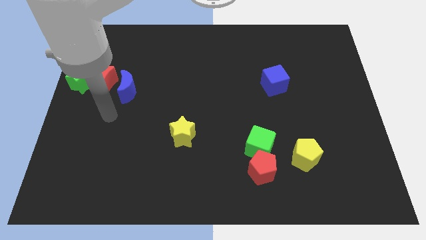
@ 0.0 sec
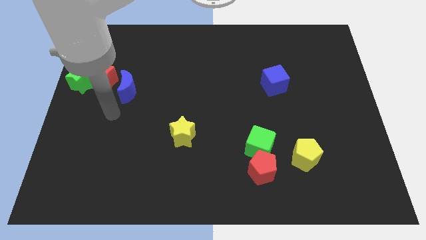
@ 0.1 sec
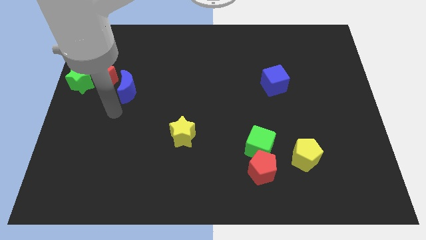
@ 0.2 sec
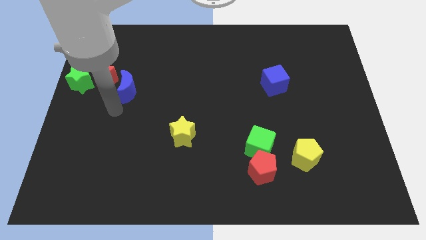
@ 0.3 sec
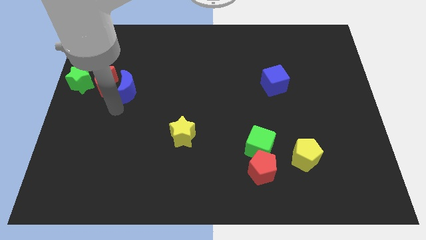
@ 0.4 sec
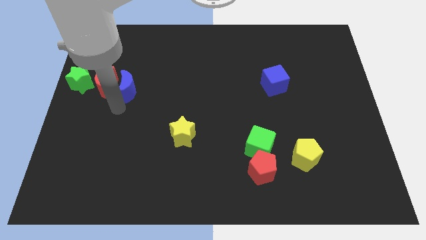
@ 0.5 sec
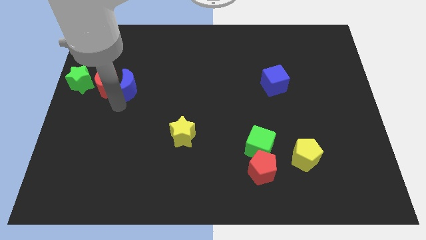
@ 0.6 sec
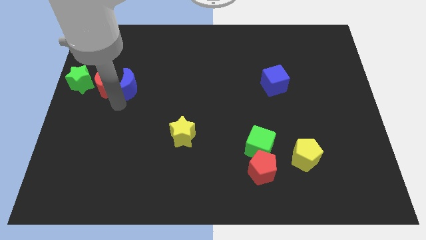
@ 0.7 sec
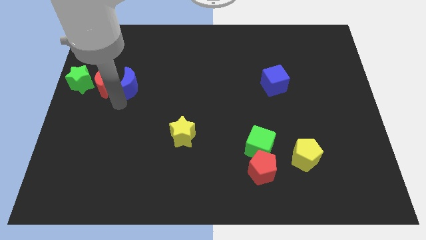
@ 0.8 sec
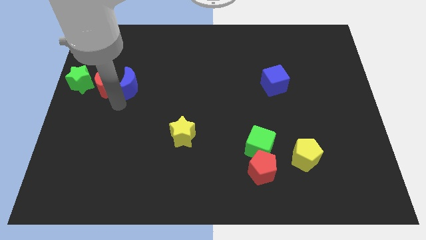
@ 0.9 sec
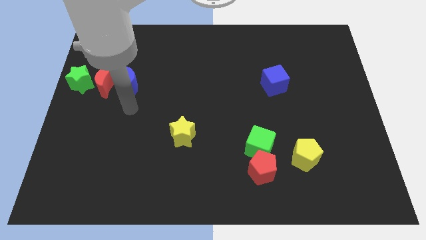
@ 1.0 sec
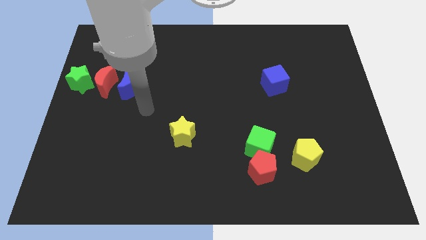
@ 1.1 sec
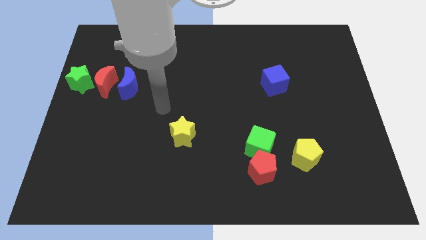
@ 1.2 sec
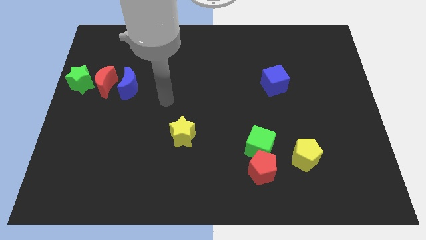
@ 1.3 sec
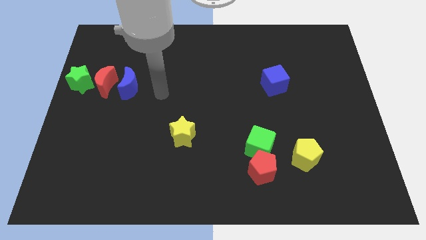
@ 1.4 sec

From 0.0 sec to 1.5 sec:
push the blue moon upwards slightly

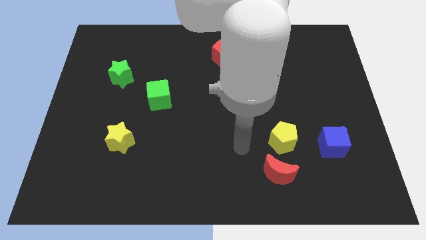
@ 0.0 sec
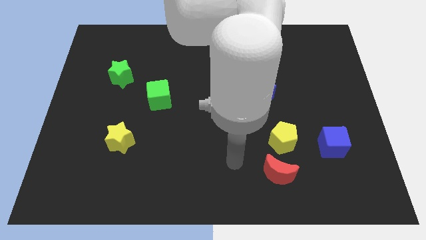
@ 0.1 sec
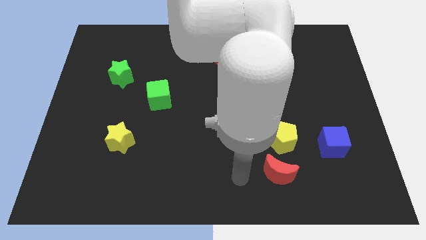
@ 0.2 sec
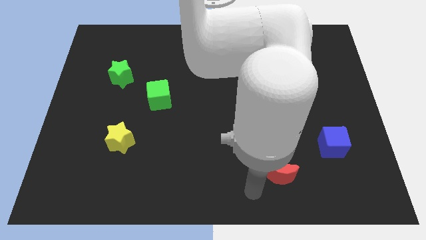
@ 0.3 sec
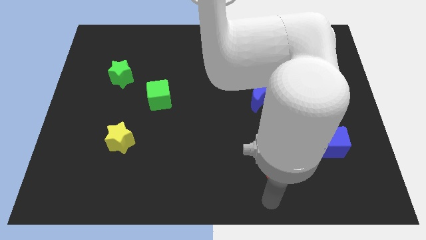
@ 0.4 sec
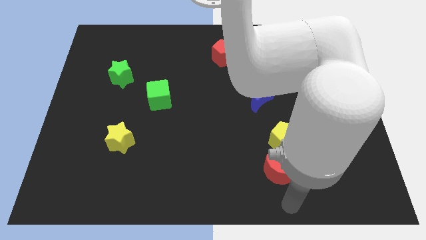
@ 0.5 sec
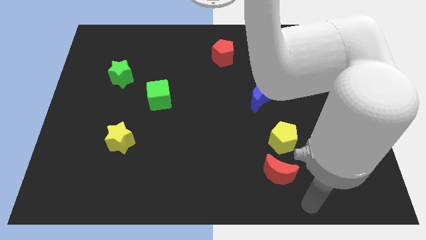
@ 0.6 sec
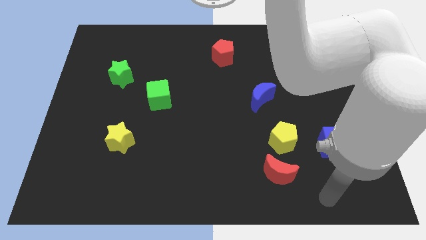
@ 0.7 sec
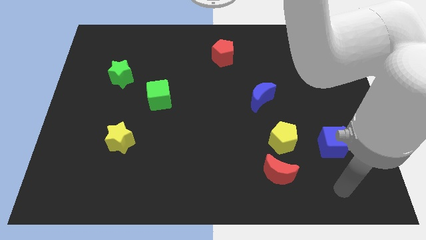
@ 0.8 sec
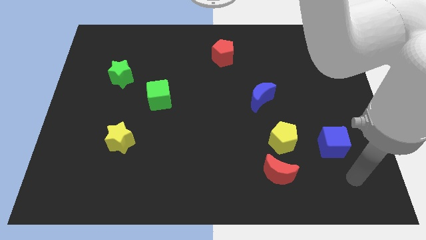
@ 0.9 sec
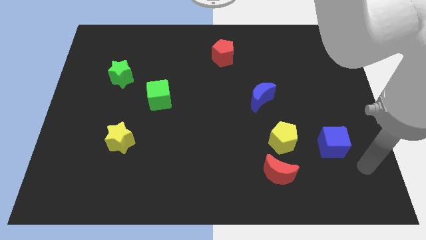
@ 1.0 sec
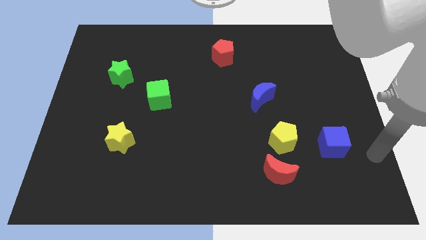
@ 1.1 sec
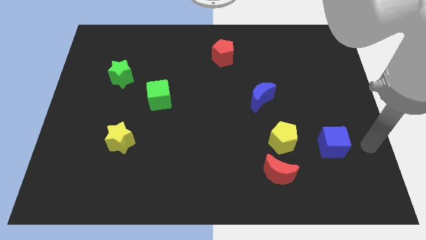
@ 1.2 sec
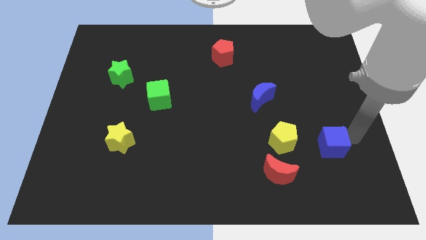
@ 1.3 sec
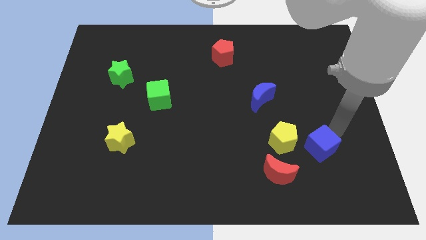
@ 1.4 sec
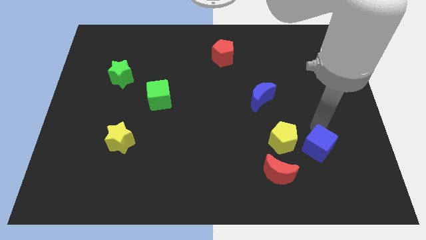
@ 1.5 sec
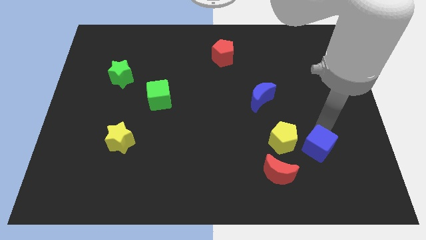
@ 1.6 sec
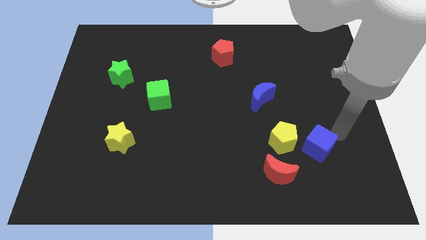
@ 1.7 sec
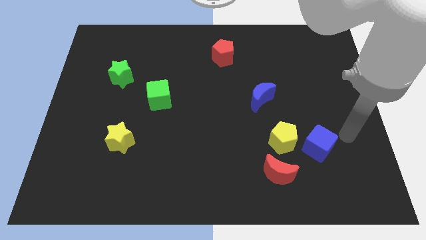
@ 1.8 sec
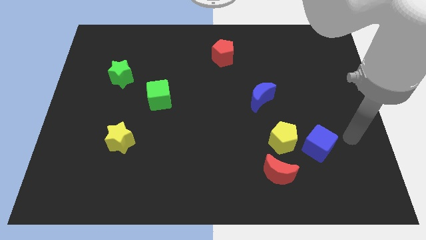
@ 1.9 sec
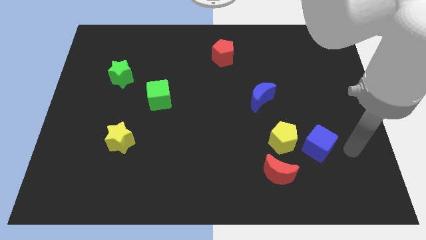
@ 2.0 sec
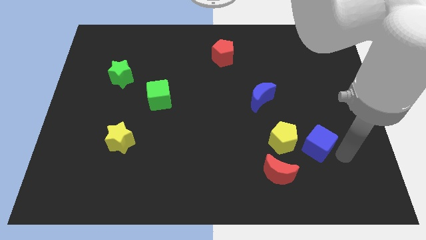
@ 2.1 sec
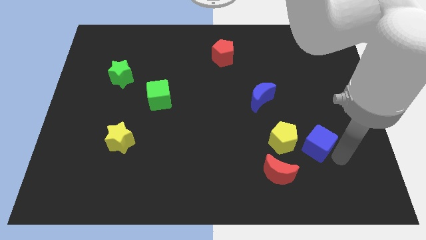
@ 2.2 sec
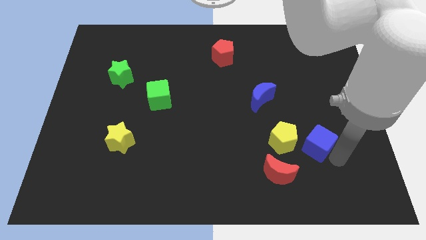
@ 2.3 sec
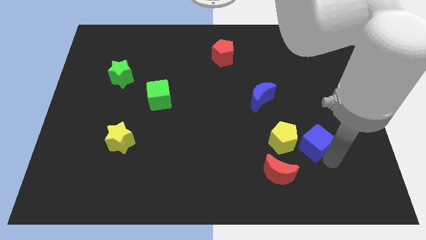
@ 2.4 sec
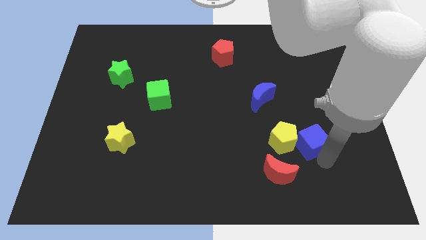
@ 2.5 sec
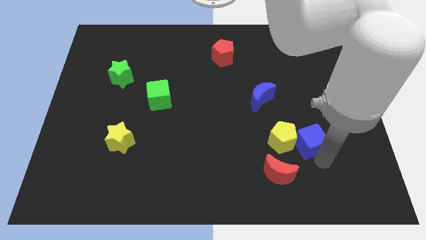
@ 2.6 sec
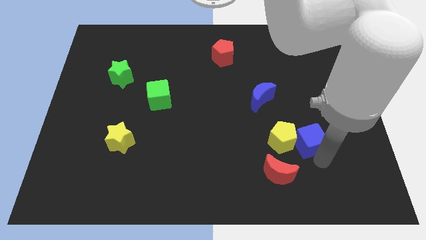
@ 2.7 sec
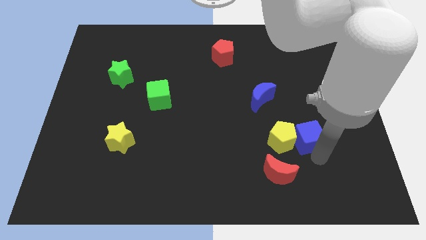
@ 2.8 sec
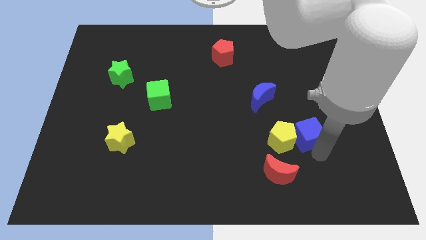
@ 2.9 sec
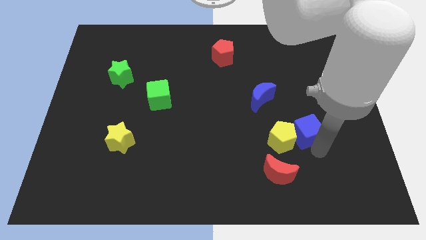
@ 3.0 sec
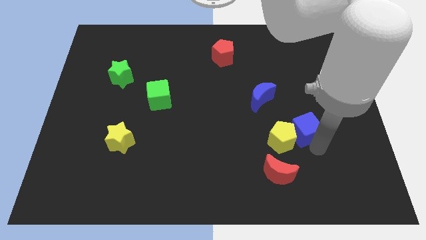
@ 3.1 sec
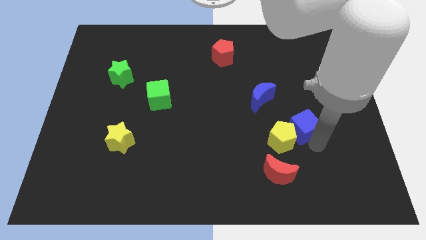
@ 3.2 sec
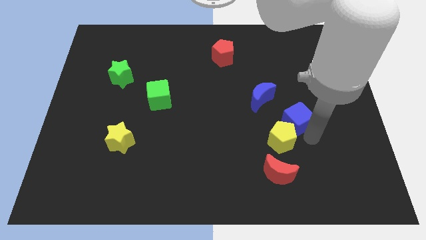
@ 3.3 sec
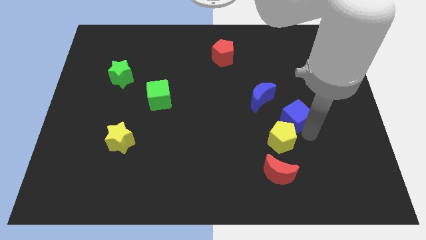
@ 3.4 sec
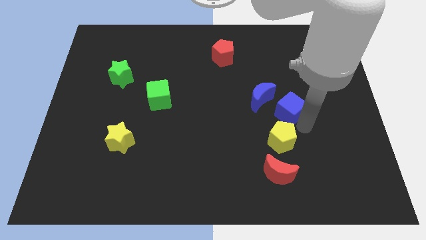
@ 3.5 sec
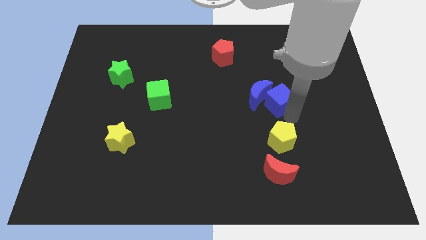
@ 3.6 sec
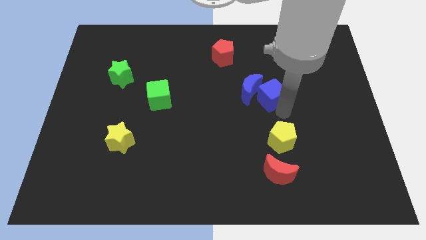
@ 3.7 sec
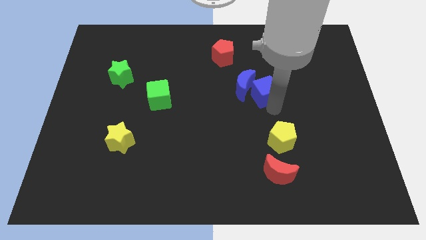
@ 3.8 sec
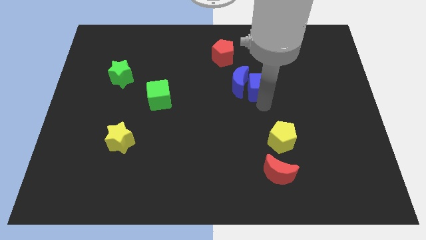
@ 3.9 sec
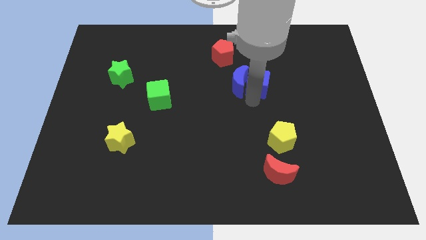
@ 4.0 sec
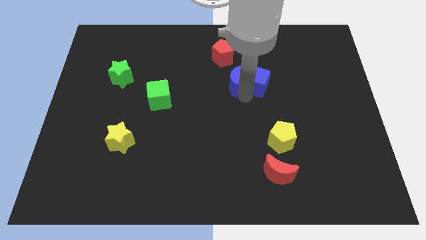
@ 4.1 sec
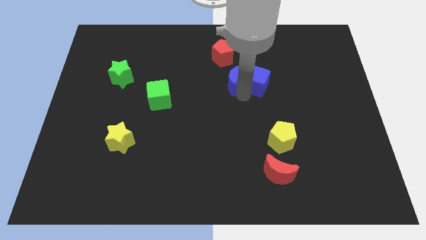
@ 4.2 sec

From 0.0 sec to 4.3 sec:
push the blue square into the blue moon

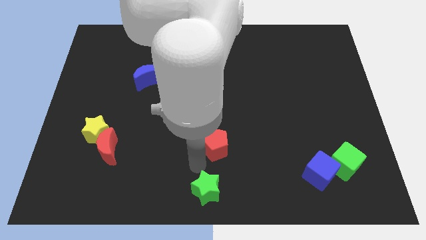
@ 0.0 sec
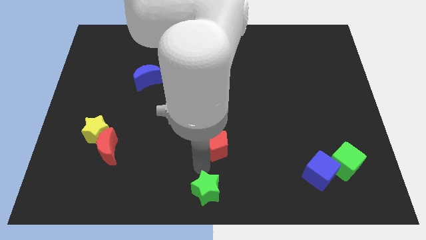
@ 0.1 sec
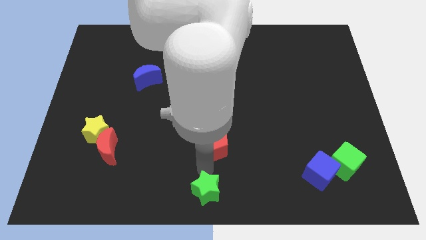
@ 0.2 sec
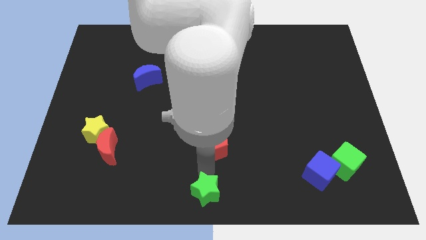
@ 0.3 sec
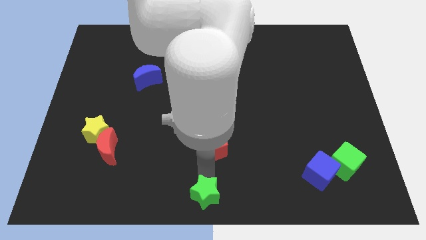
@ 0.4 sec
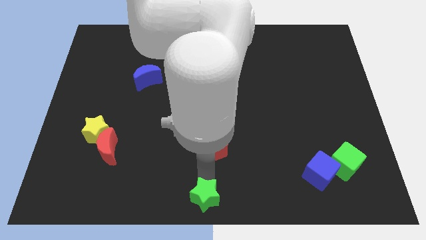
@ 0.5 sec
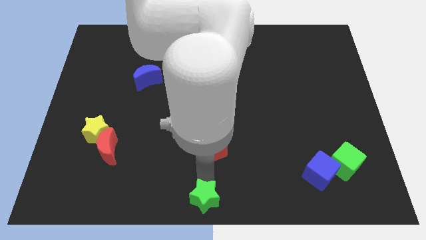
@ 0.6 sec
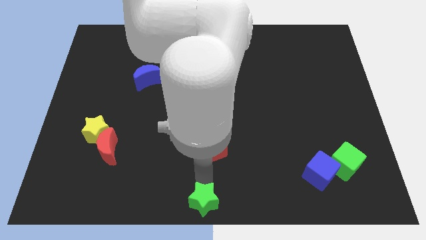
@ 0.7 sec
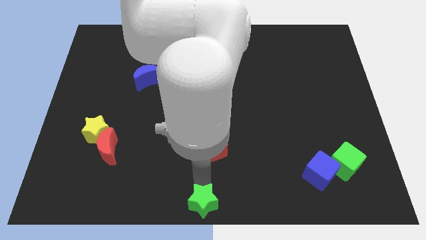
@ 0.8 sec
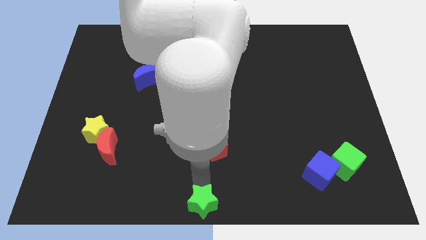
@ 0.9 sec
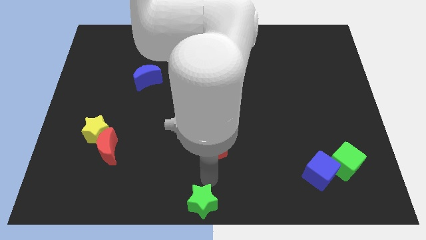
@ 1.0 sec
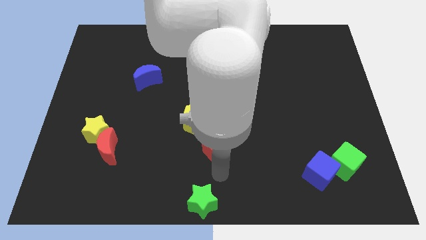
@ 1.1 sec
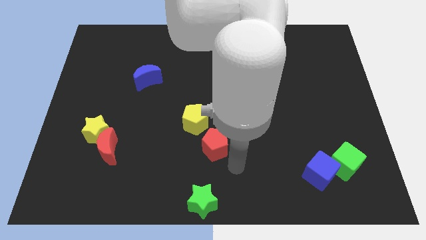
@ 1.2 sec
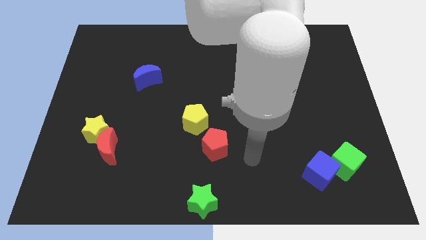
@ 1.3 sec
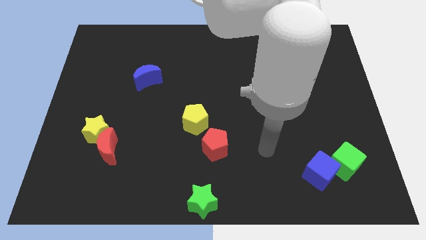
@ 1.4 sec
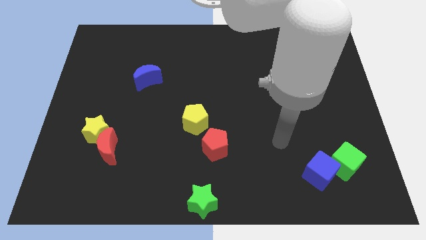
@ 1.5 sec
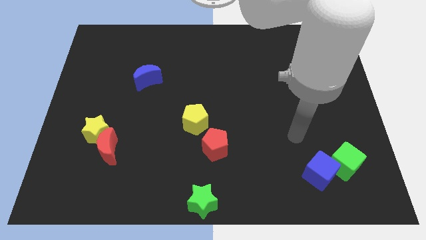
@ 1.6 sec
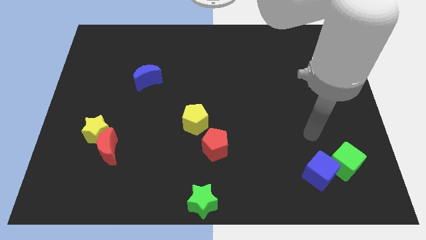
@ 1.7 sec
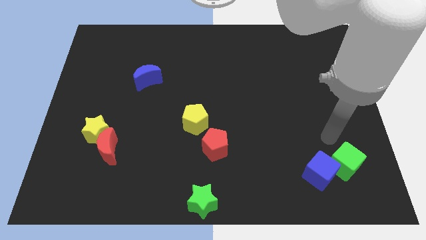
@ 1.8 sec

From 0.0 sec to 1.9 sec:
push the green star to the bottom center of the board

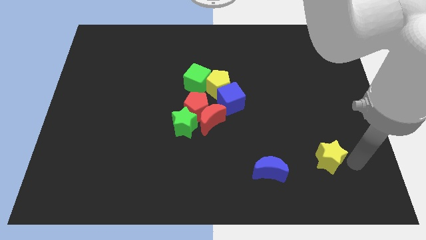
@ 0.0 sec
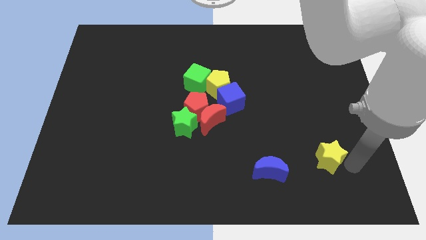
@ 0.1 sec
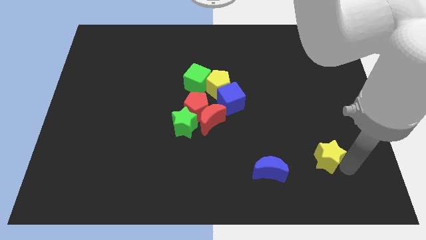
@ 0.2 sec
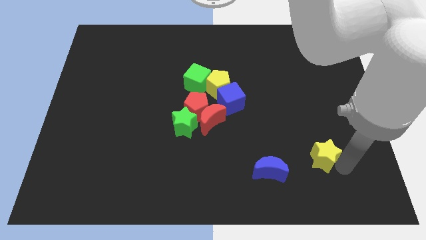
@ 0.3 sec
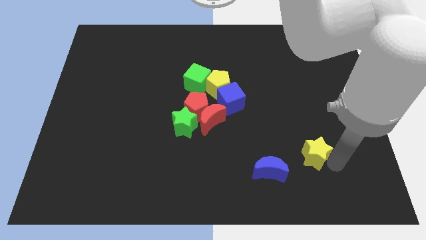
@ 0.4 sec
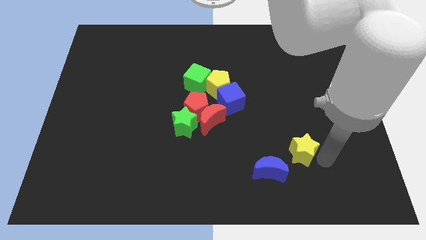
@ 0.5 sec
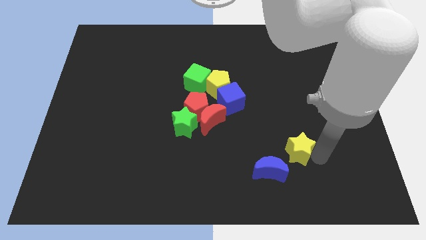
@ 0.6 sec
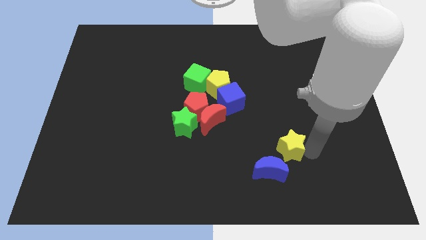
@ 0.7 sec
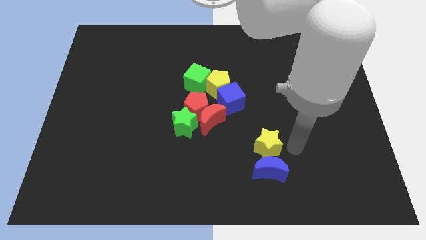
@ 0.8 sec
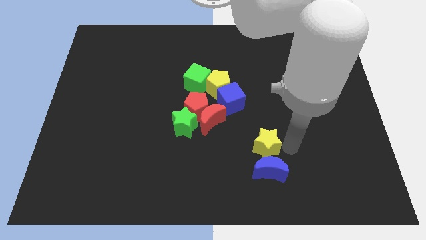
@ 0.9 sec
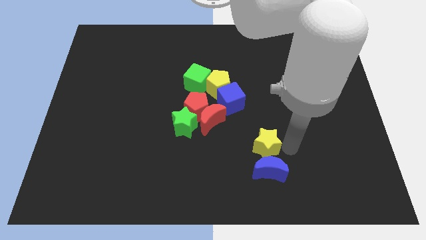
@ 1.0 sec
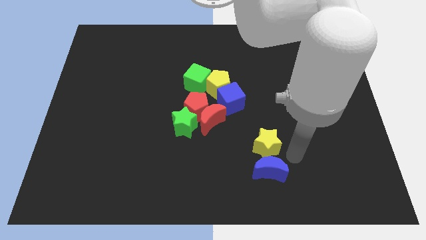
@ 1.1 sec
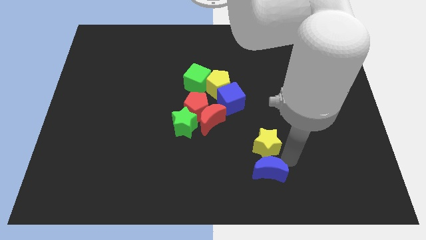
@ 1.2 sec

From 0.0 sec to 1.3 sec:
place the yellow star above the blue moon
